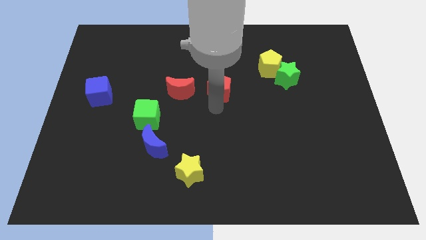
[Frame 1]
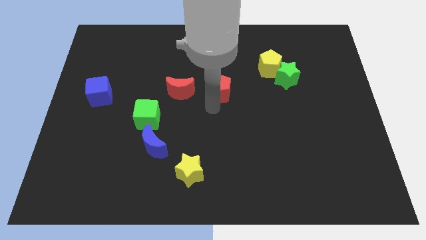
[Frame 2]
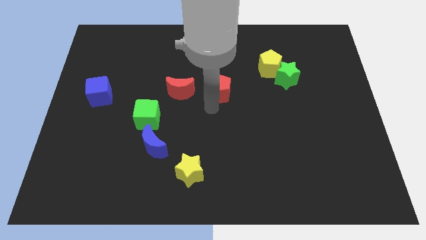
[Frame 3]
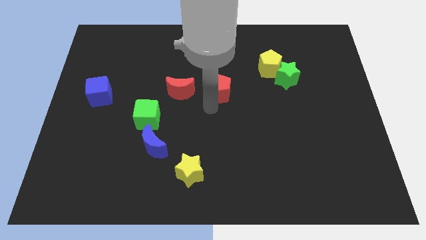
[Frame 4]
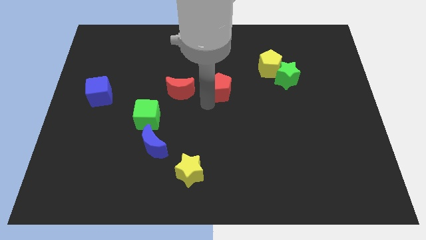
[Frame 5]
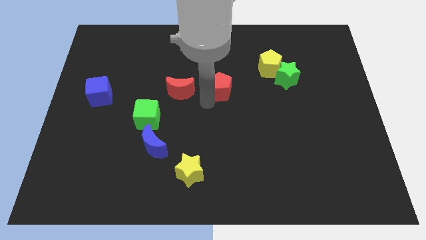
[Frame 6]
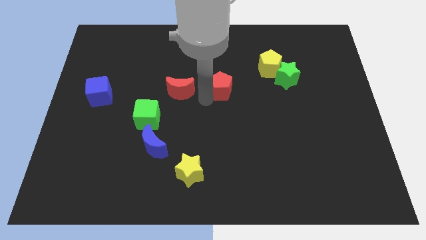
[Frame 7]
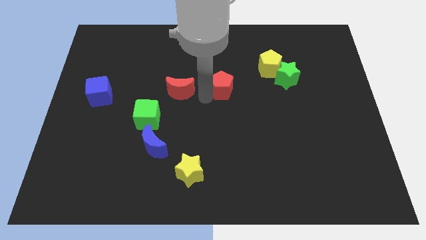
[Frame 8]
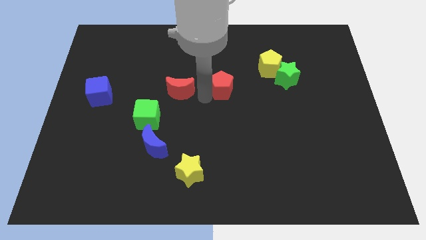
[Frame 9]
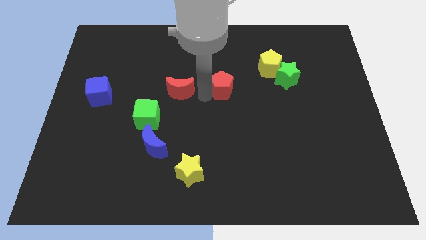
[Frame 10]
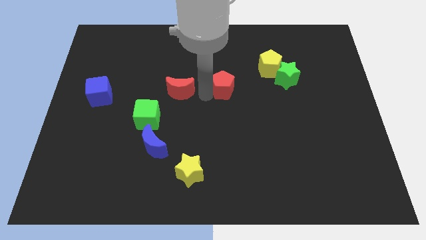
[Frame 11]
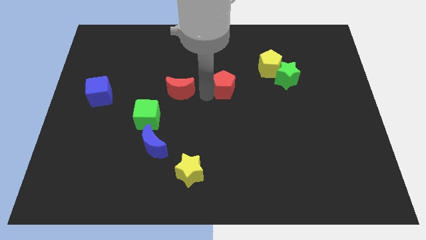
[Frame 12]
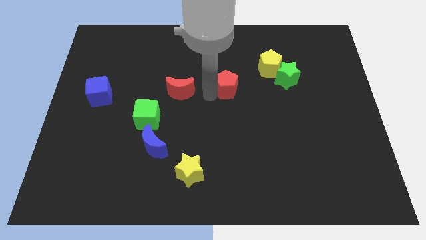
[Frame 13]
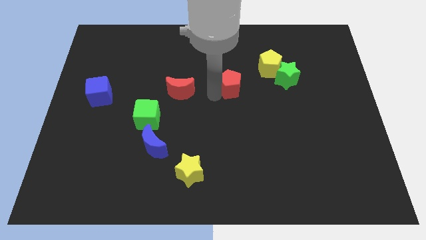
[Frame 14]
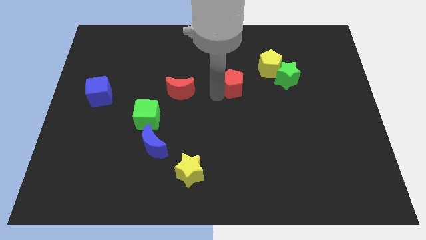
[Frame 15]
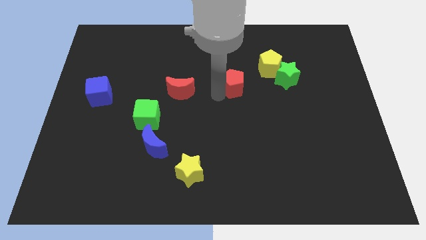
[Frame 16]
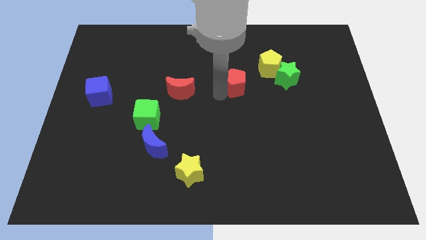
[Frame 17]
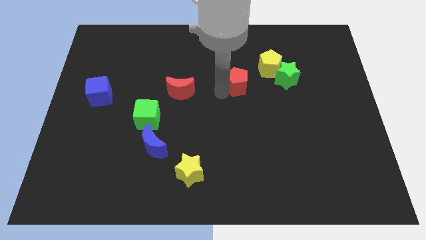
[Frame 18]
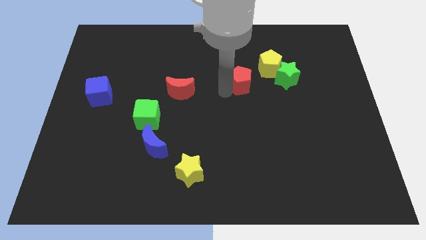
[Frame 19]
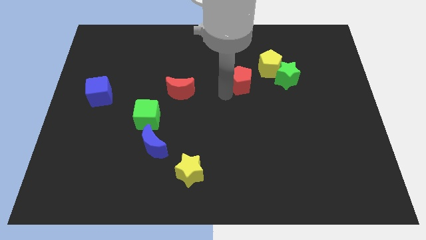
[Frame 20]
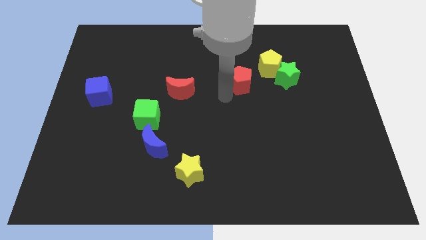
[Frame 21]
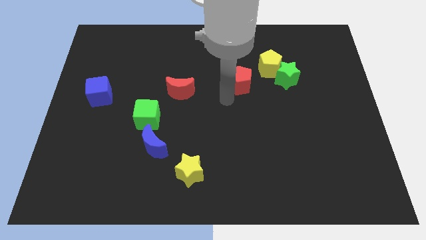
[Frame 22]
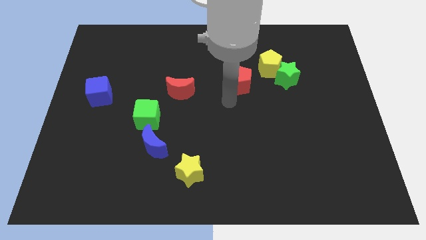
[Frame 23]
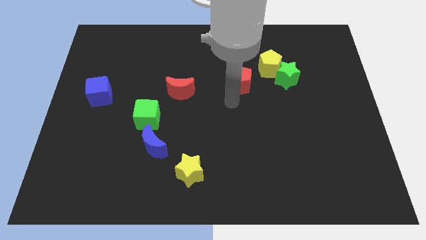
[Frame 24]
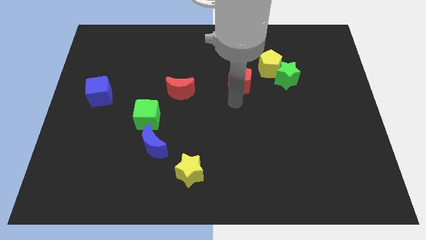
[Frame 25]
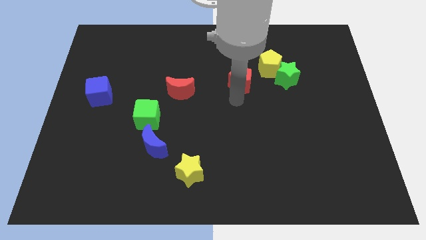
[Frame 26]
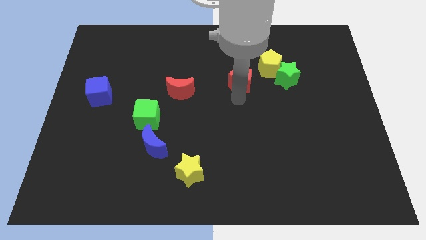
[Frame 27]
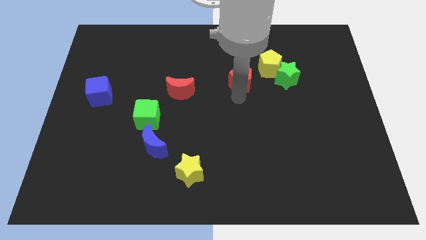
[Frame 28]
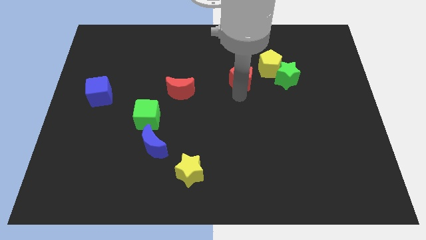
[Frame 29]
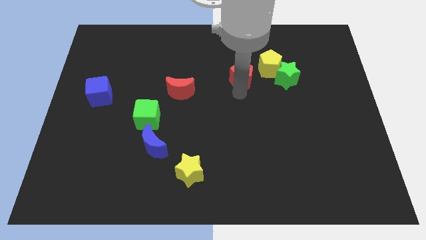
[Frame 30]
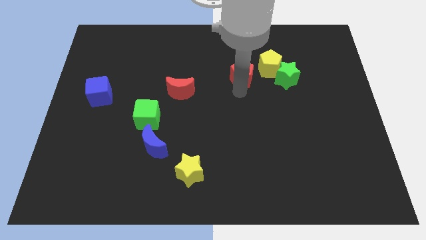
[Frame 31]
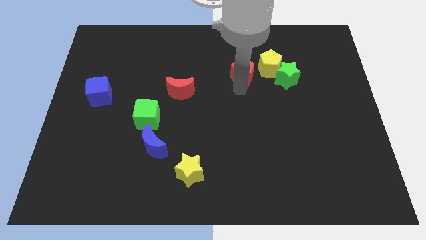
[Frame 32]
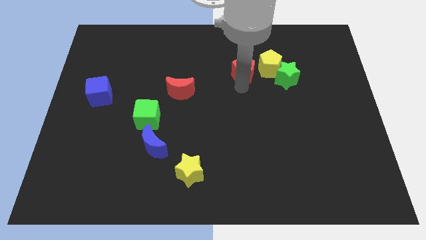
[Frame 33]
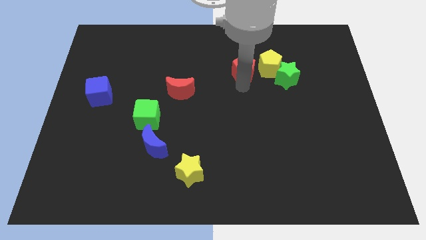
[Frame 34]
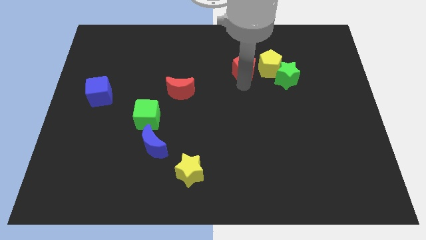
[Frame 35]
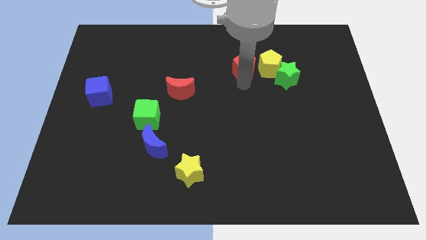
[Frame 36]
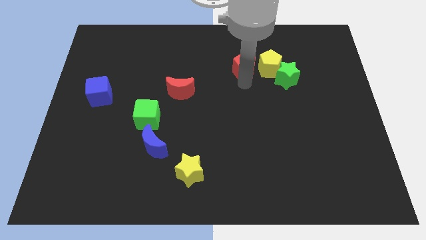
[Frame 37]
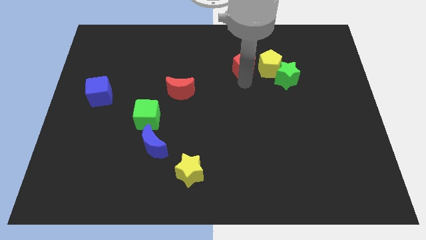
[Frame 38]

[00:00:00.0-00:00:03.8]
move the red pentagon horizontally to the left of the yellow pentagon

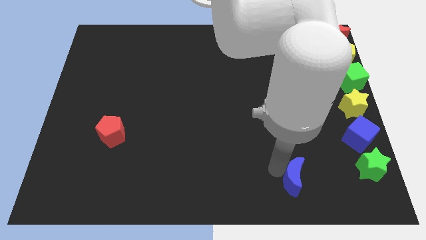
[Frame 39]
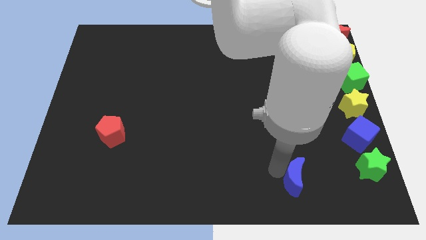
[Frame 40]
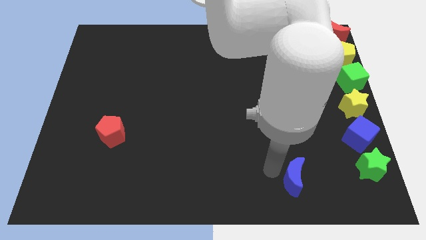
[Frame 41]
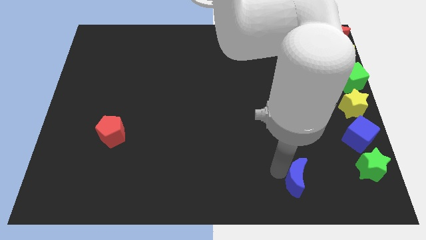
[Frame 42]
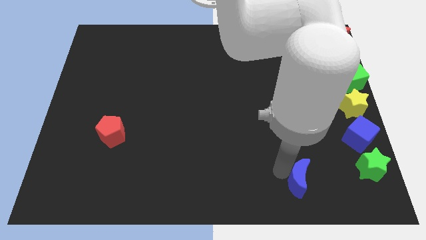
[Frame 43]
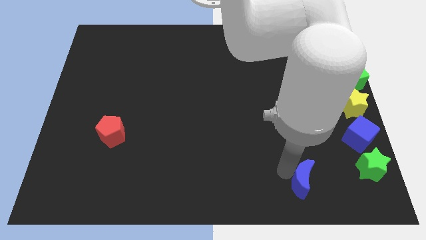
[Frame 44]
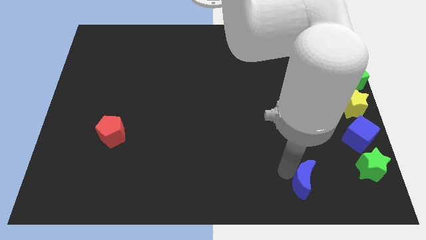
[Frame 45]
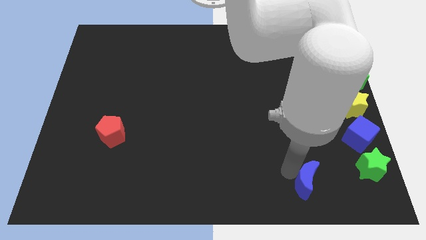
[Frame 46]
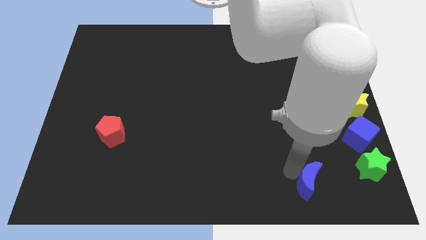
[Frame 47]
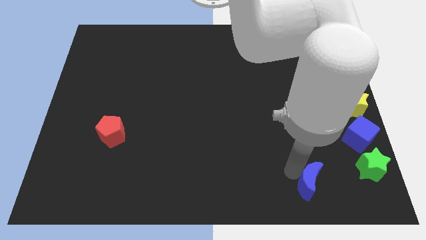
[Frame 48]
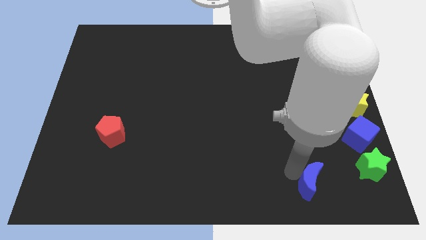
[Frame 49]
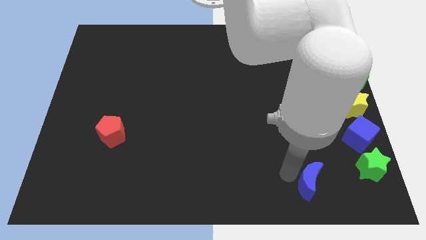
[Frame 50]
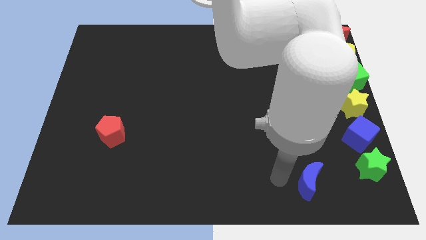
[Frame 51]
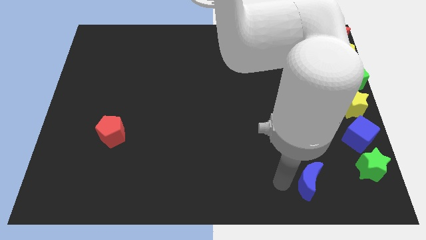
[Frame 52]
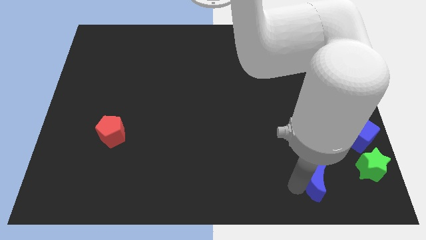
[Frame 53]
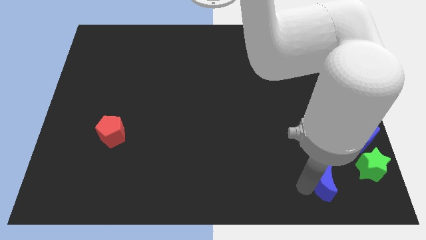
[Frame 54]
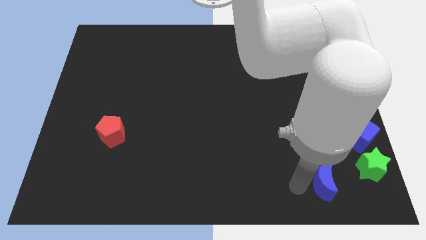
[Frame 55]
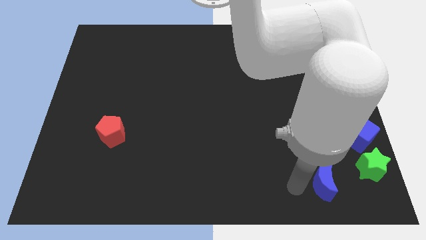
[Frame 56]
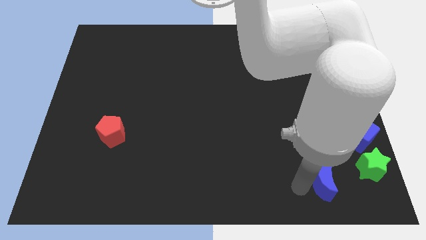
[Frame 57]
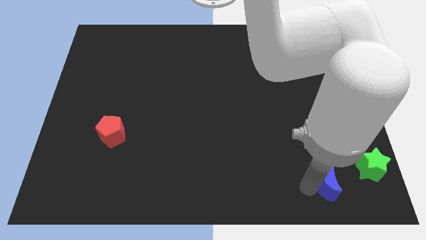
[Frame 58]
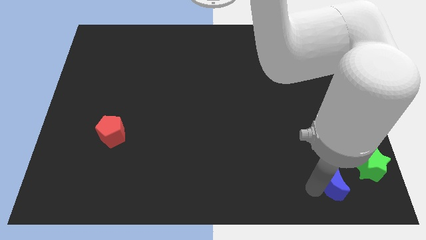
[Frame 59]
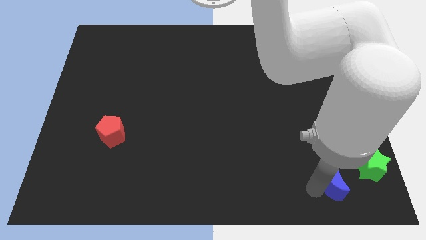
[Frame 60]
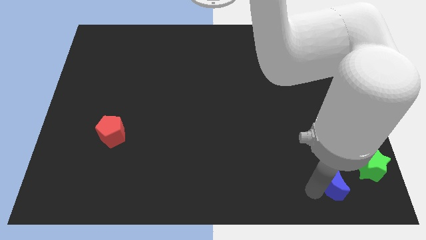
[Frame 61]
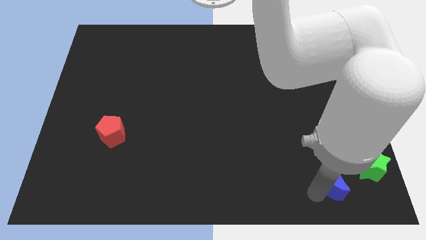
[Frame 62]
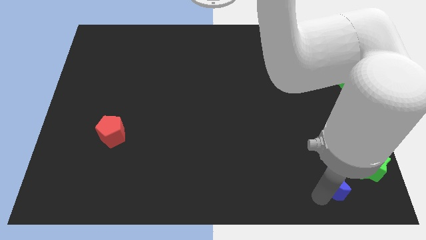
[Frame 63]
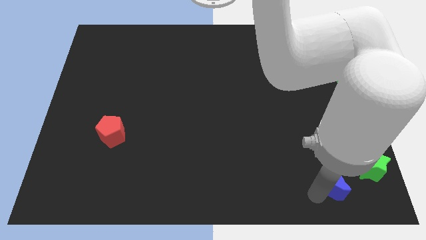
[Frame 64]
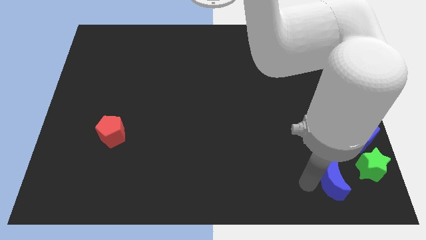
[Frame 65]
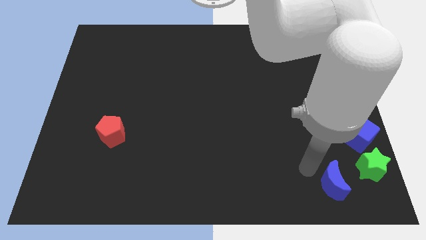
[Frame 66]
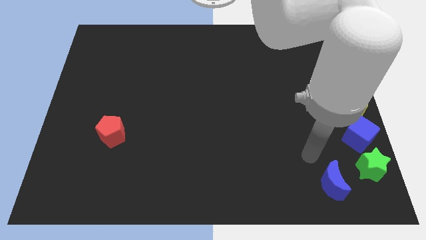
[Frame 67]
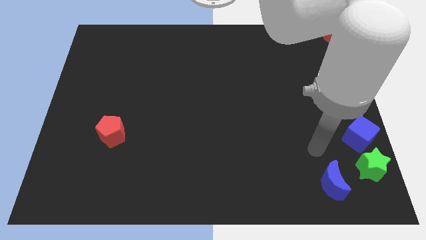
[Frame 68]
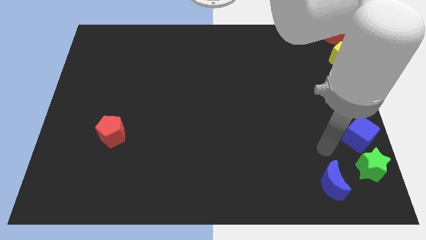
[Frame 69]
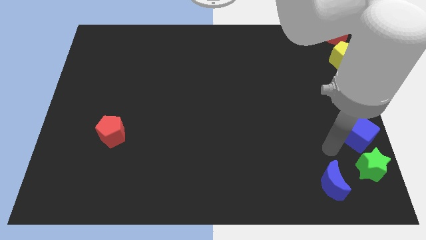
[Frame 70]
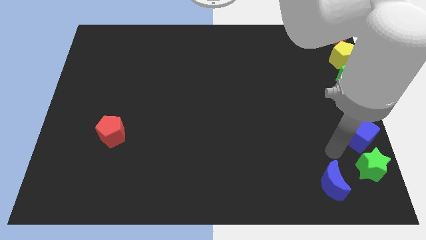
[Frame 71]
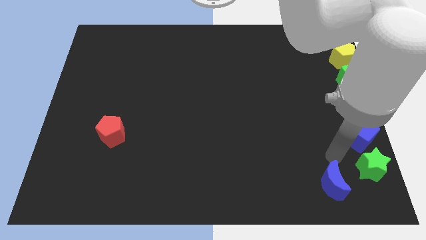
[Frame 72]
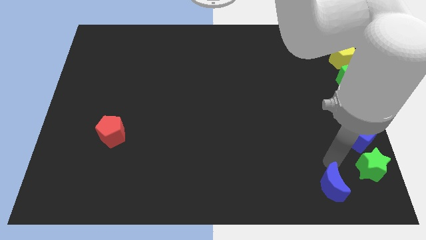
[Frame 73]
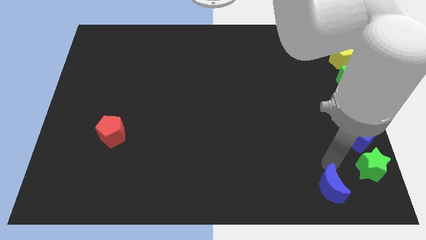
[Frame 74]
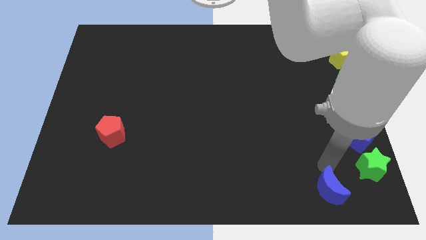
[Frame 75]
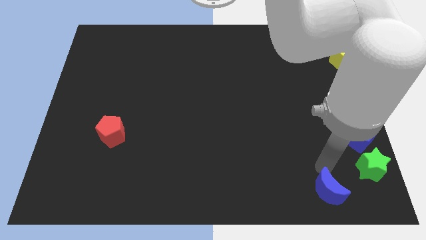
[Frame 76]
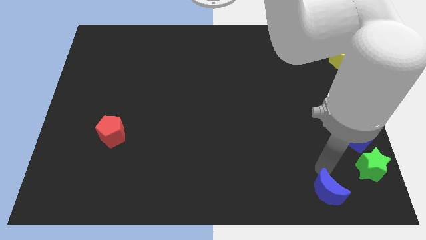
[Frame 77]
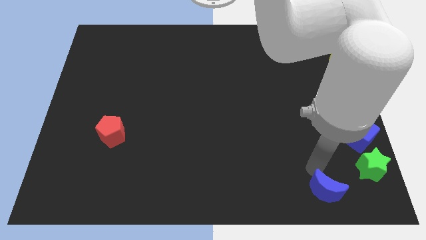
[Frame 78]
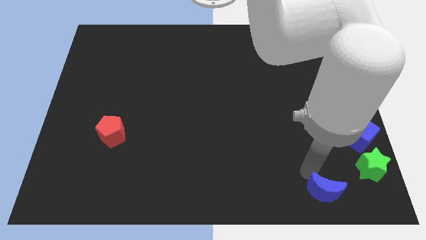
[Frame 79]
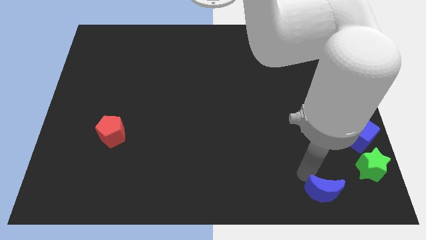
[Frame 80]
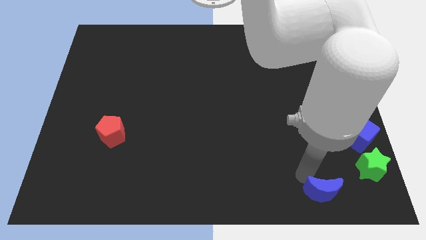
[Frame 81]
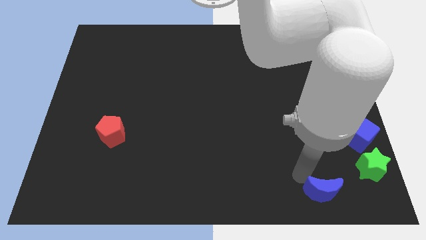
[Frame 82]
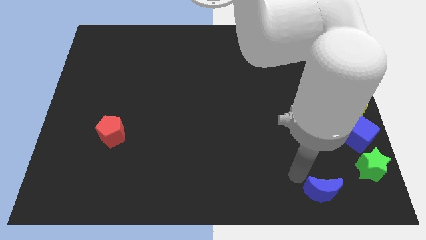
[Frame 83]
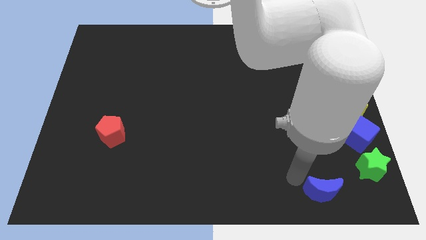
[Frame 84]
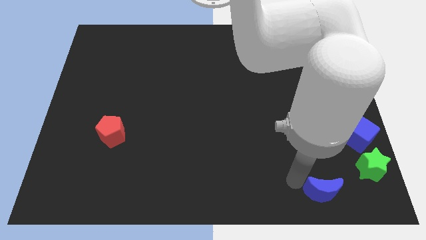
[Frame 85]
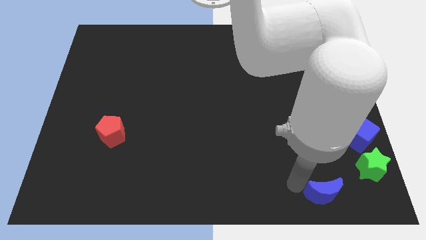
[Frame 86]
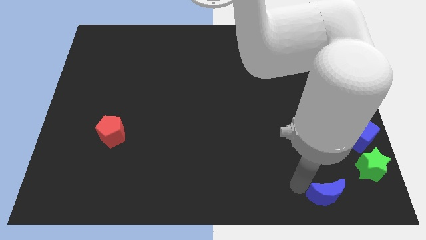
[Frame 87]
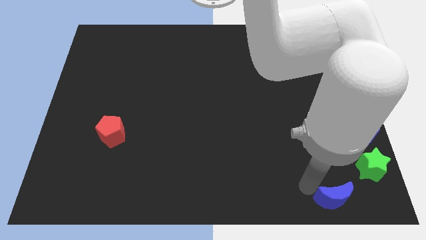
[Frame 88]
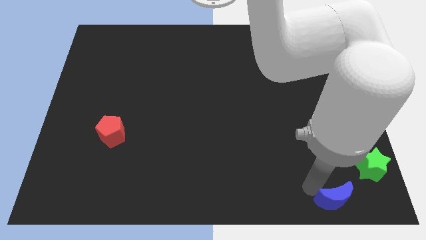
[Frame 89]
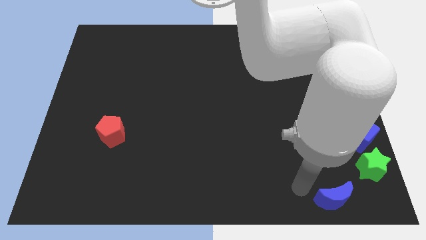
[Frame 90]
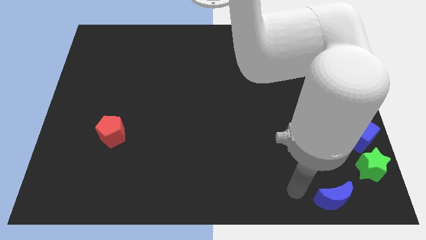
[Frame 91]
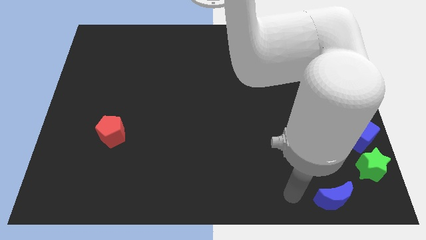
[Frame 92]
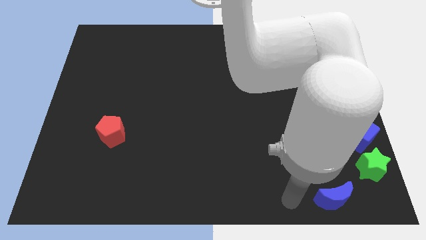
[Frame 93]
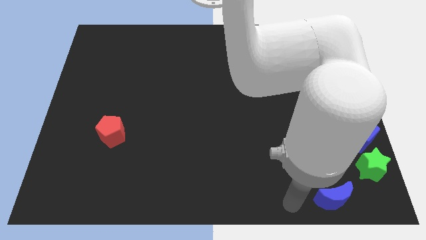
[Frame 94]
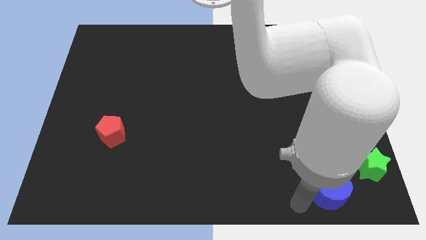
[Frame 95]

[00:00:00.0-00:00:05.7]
place the blue crescent diagonally on the bottom left side of the green star
